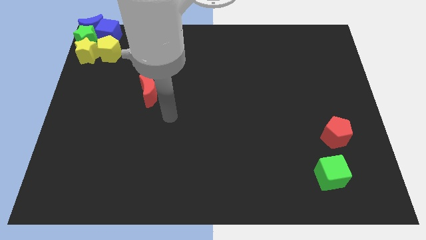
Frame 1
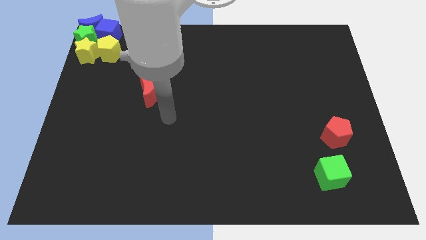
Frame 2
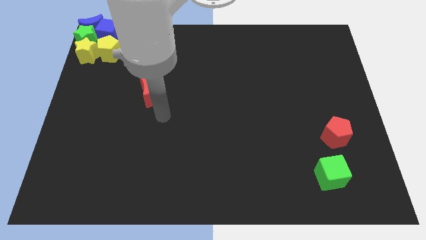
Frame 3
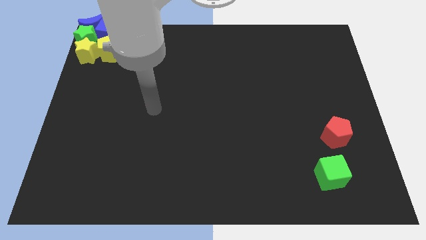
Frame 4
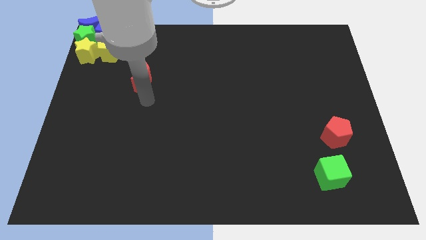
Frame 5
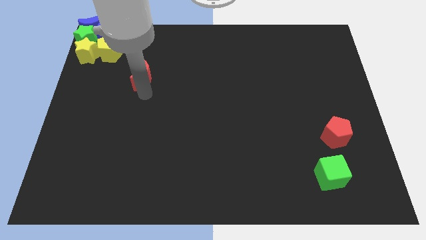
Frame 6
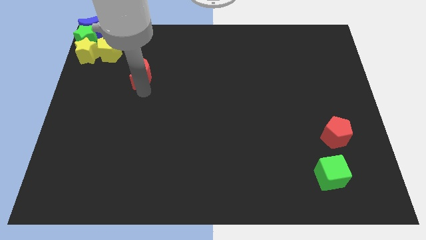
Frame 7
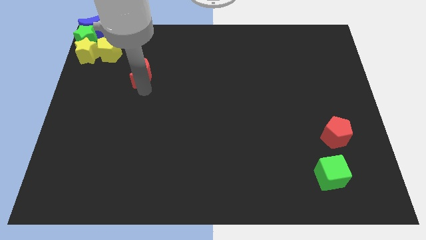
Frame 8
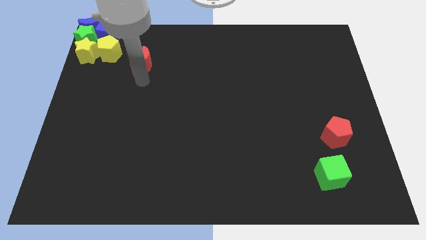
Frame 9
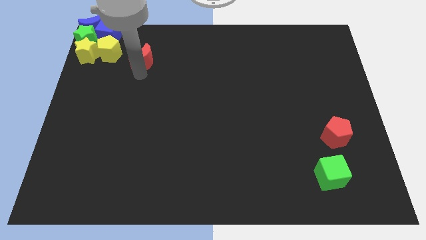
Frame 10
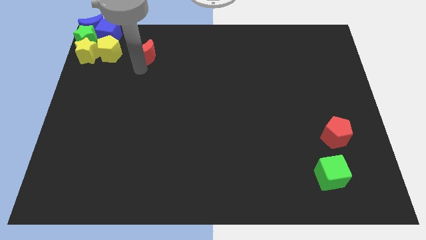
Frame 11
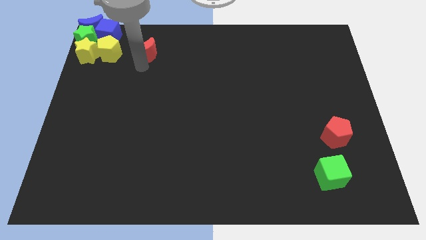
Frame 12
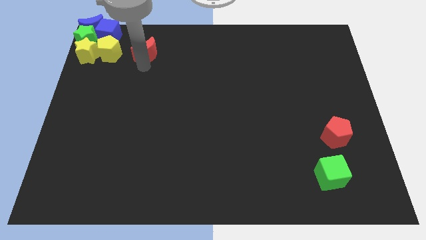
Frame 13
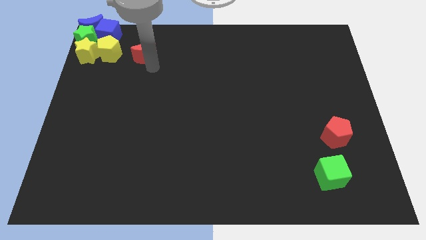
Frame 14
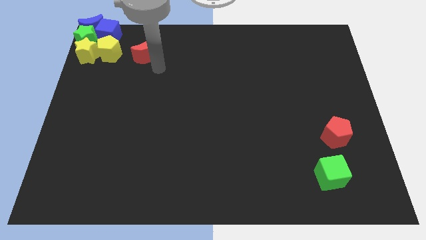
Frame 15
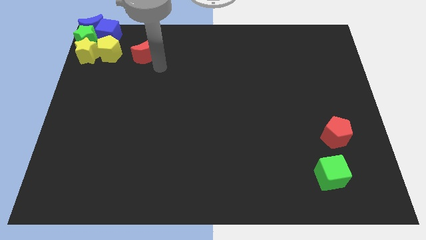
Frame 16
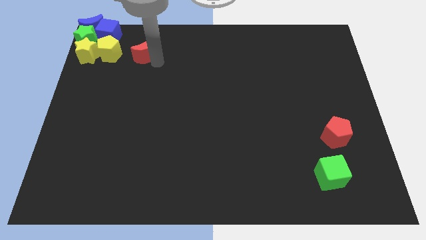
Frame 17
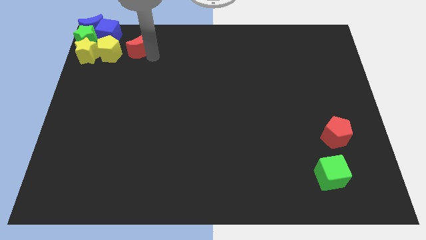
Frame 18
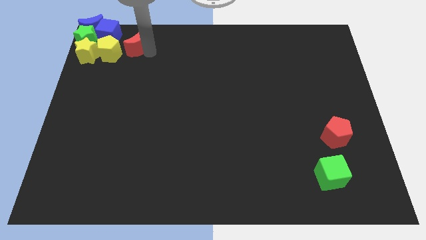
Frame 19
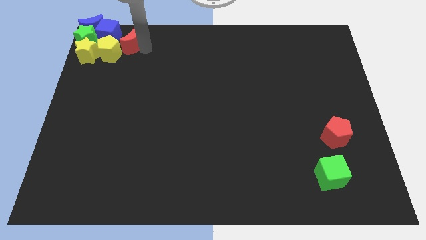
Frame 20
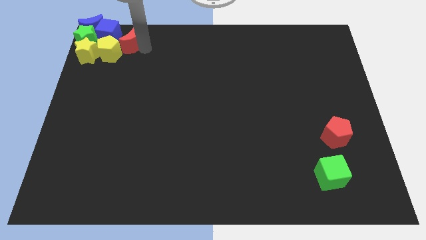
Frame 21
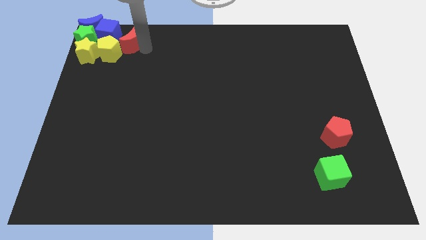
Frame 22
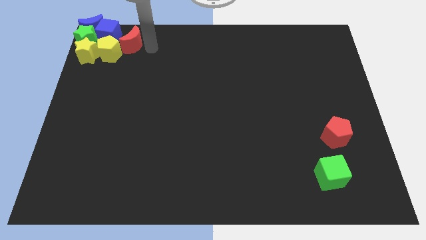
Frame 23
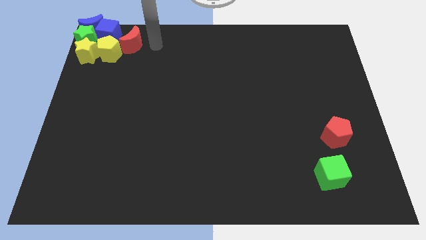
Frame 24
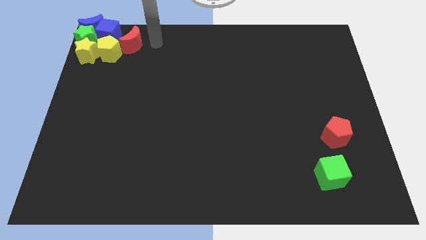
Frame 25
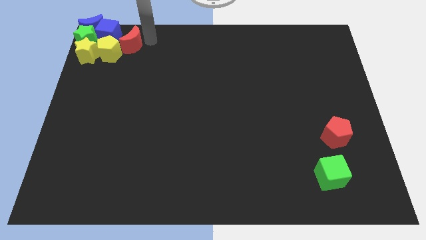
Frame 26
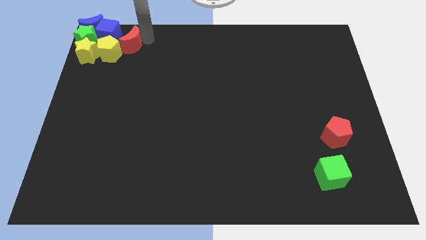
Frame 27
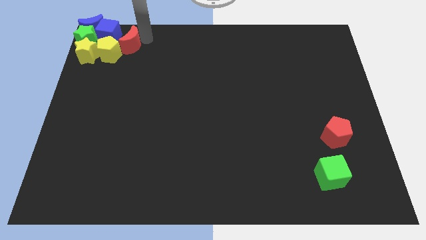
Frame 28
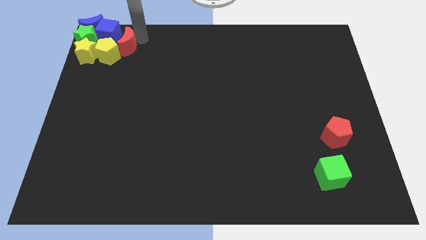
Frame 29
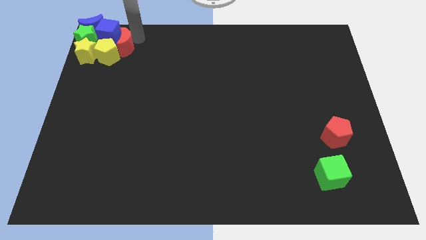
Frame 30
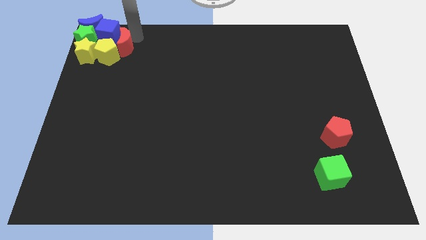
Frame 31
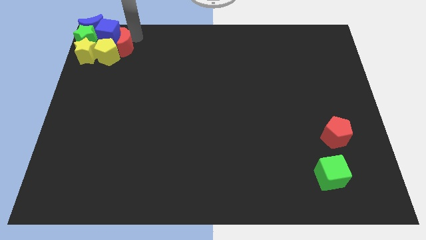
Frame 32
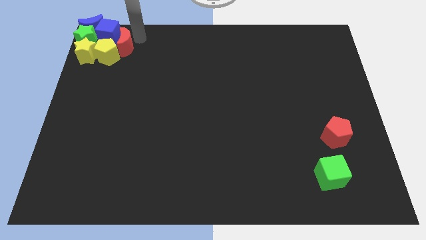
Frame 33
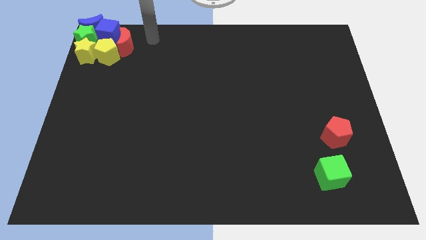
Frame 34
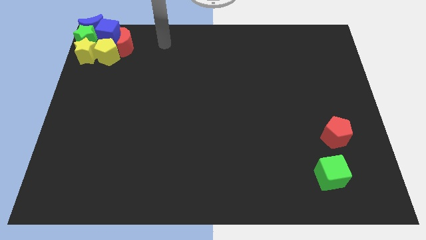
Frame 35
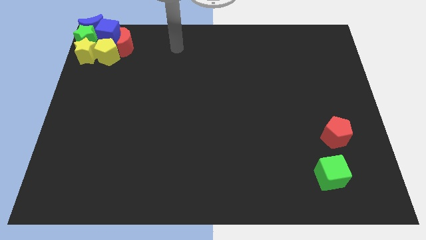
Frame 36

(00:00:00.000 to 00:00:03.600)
move the red moon to the right side of blue block

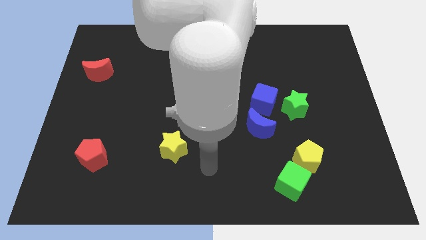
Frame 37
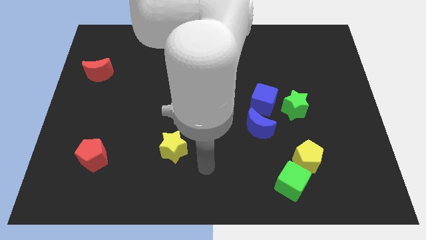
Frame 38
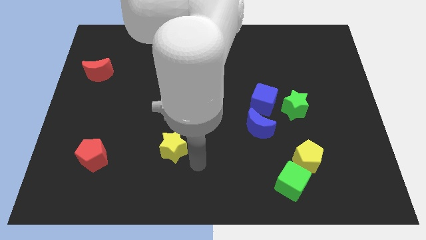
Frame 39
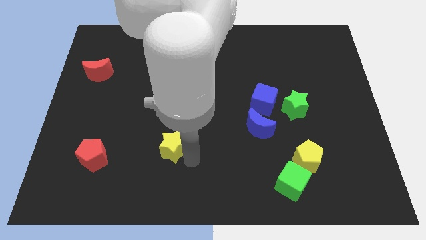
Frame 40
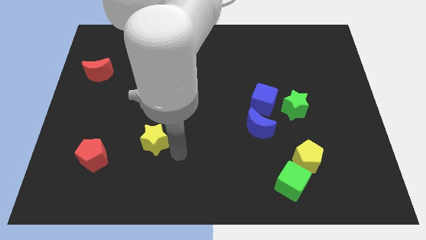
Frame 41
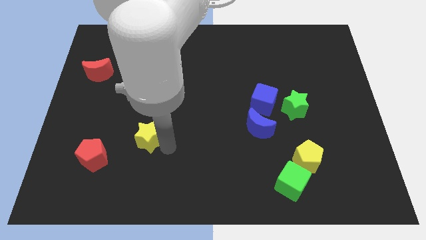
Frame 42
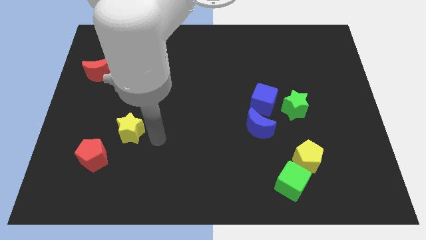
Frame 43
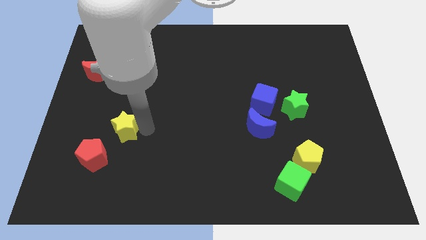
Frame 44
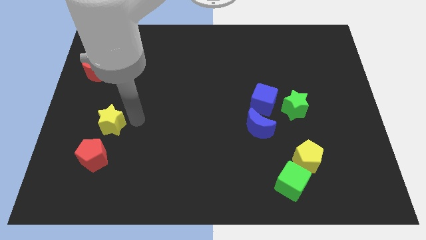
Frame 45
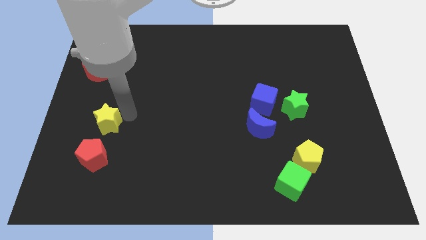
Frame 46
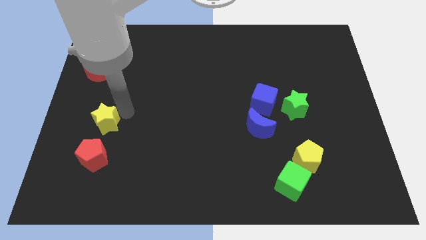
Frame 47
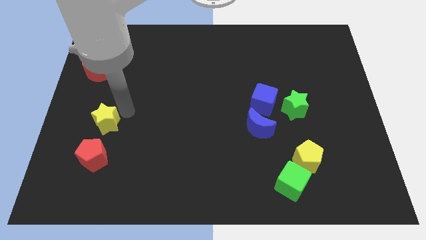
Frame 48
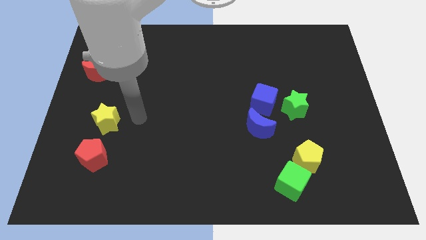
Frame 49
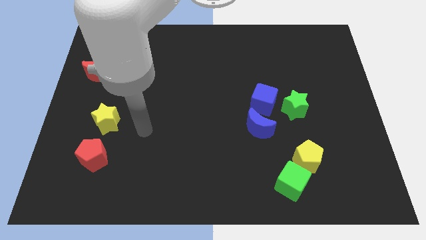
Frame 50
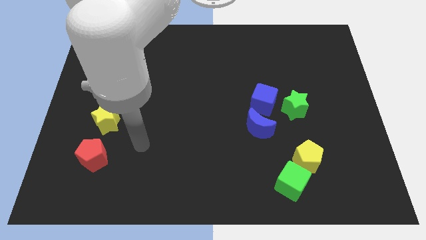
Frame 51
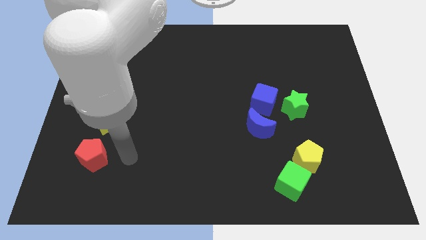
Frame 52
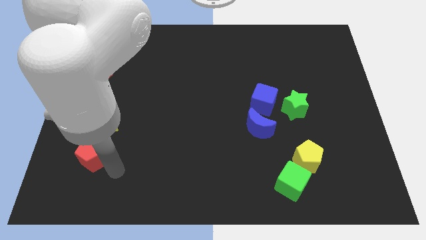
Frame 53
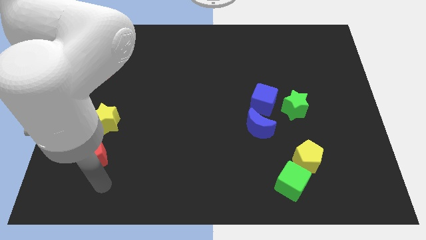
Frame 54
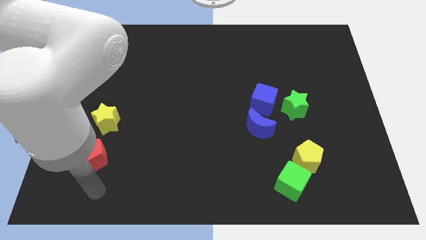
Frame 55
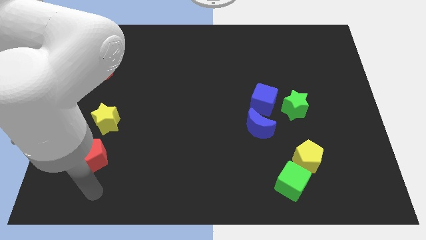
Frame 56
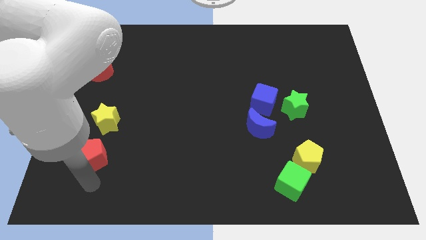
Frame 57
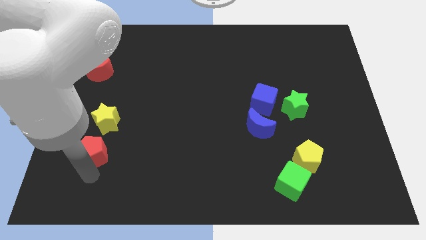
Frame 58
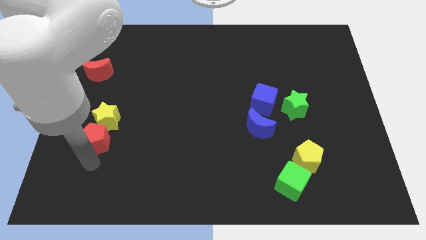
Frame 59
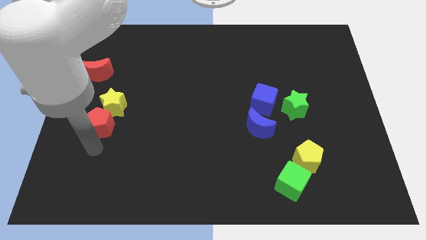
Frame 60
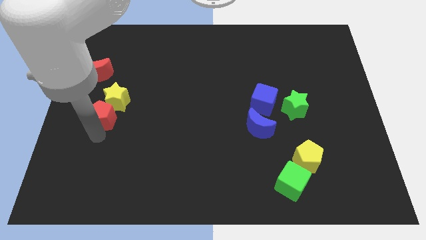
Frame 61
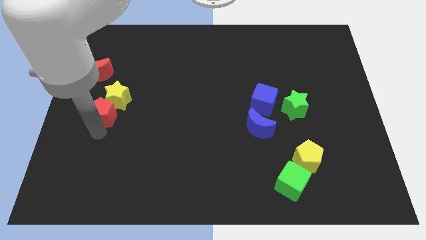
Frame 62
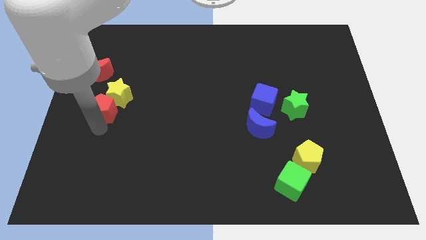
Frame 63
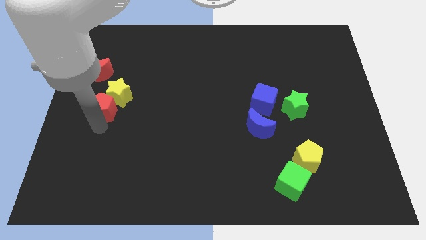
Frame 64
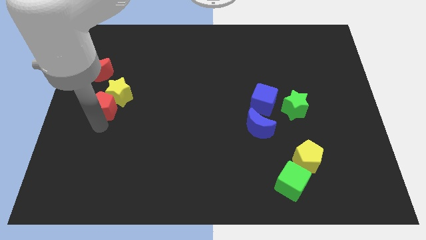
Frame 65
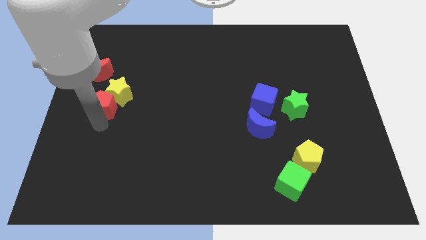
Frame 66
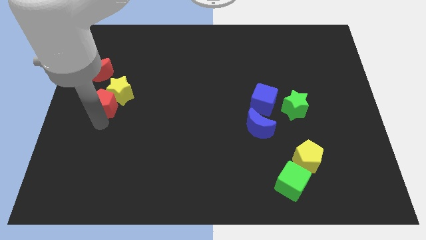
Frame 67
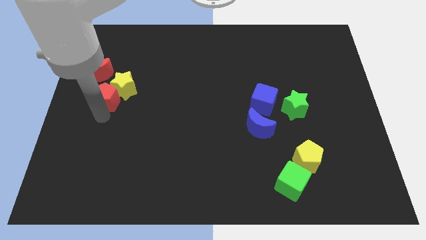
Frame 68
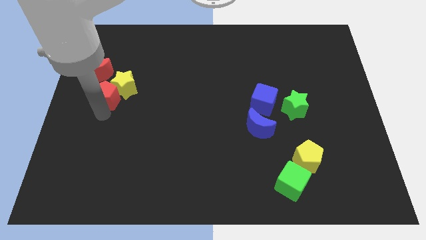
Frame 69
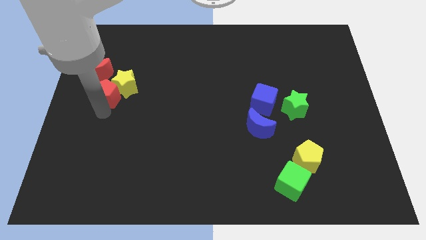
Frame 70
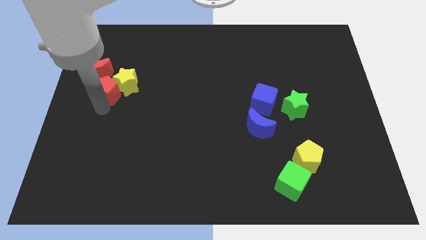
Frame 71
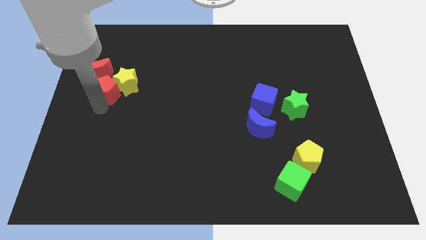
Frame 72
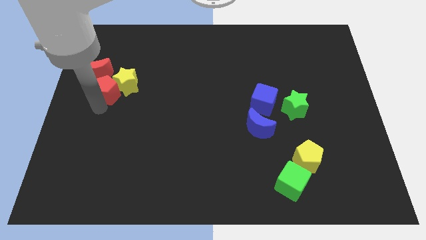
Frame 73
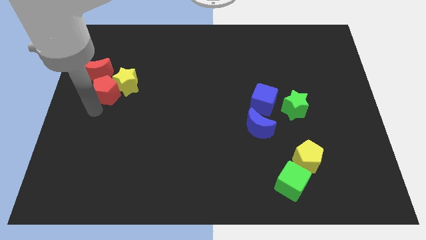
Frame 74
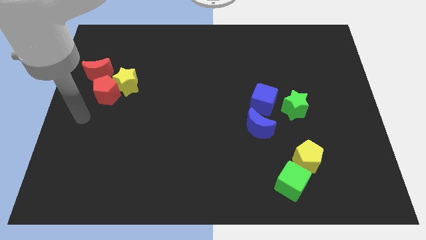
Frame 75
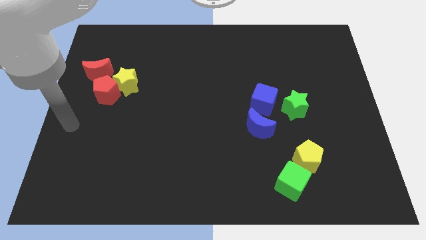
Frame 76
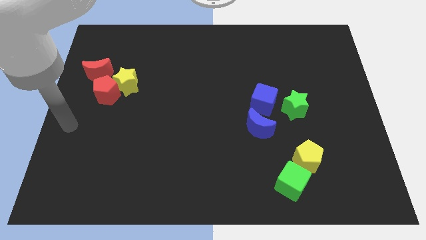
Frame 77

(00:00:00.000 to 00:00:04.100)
push the yellow star and the red pentagon into the red crescent

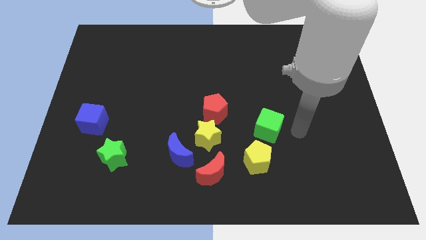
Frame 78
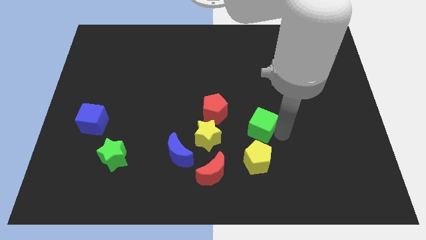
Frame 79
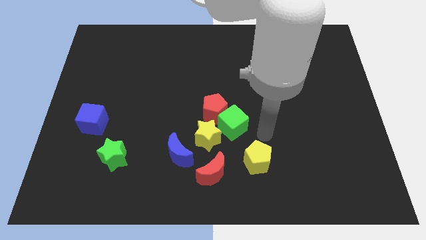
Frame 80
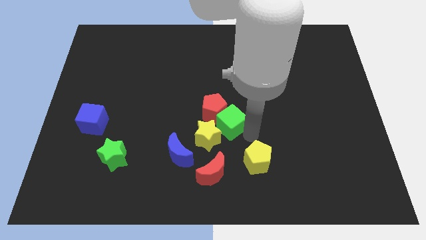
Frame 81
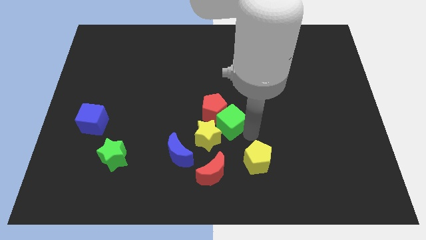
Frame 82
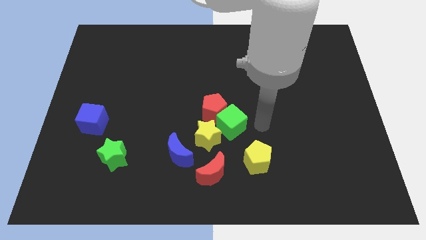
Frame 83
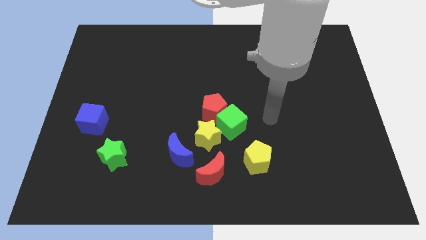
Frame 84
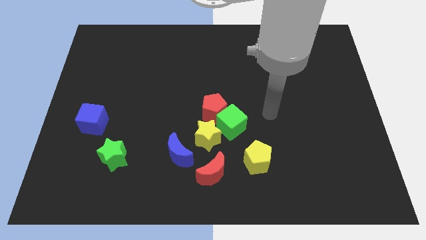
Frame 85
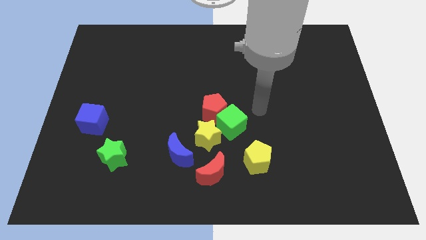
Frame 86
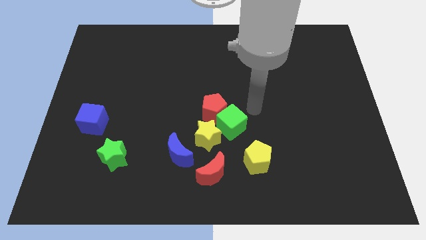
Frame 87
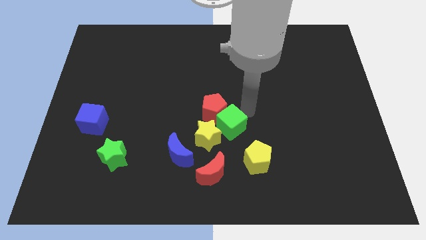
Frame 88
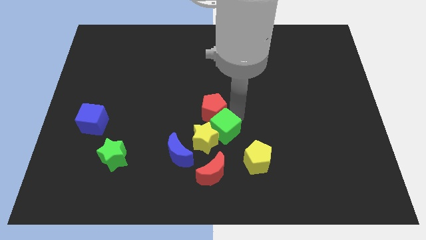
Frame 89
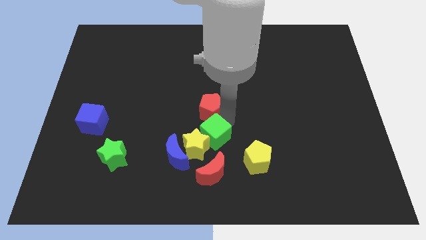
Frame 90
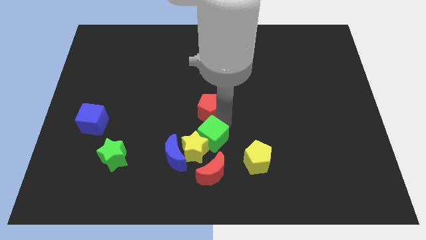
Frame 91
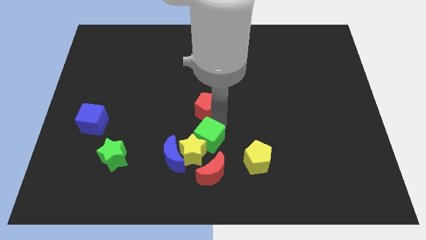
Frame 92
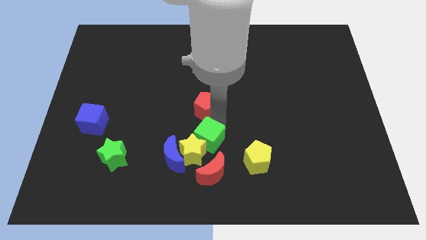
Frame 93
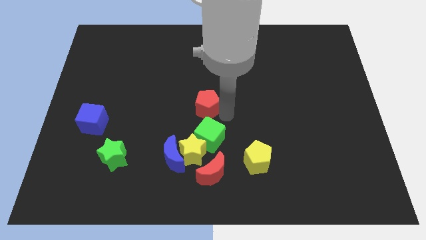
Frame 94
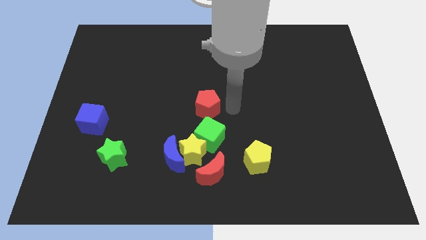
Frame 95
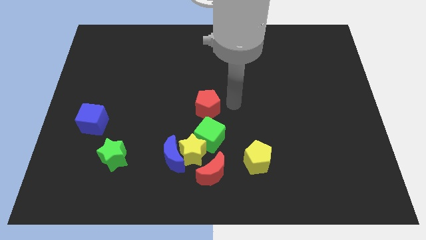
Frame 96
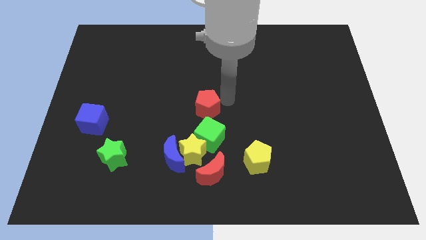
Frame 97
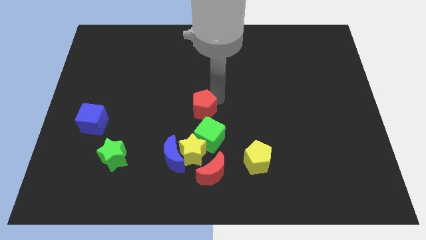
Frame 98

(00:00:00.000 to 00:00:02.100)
place the green cube diagonally to the yellow star
